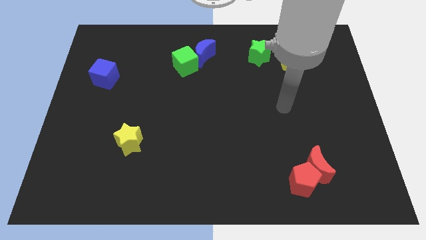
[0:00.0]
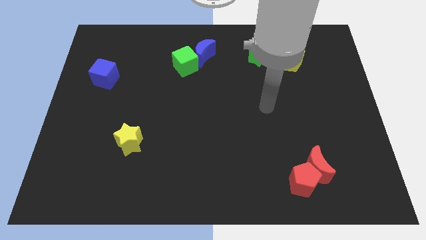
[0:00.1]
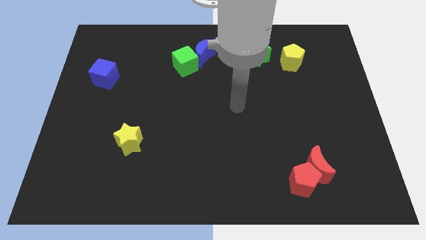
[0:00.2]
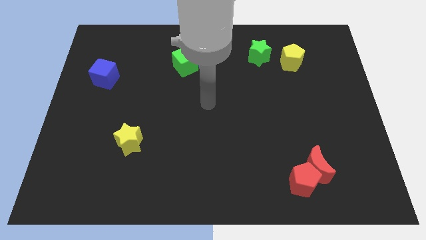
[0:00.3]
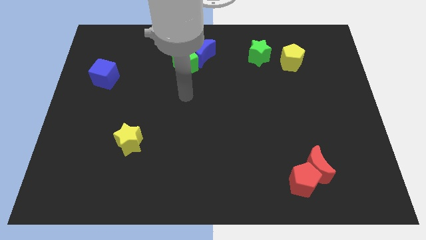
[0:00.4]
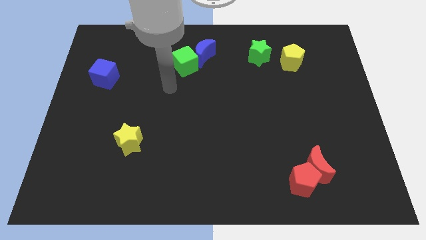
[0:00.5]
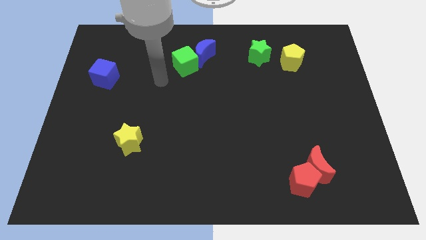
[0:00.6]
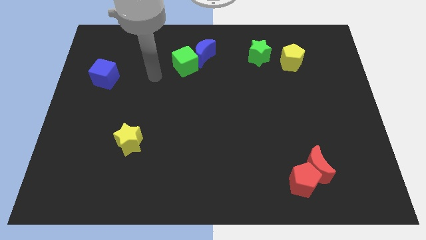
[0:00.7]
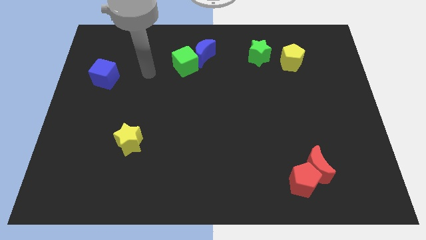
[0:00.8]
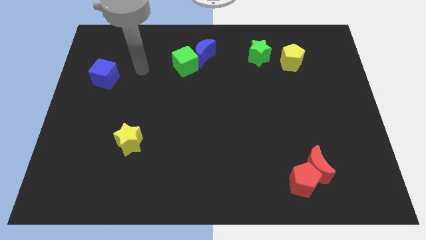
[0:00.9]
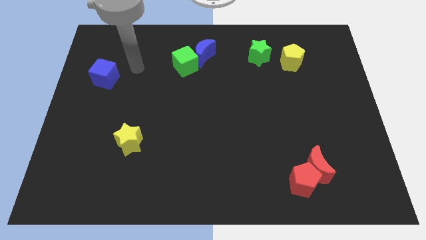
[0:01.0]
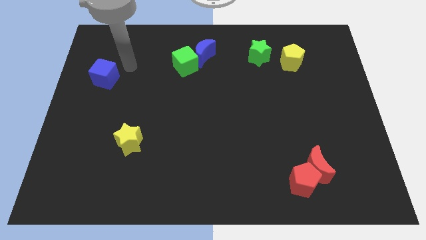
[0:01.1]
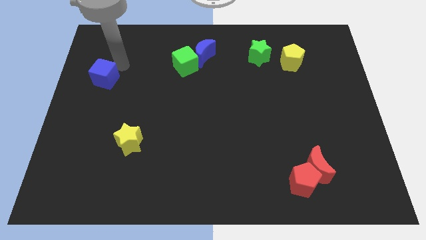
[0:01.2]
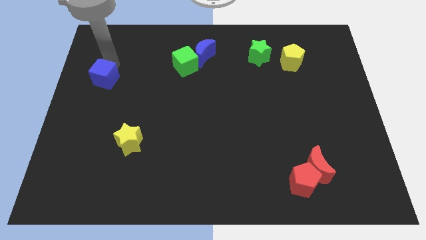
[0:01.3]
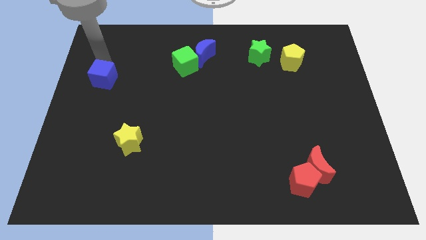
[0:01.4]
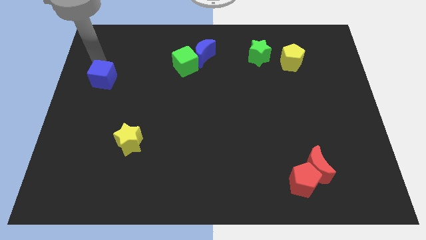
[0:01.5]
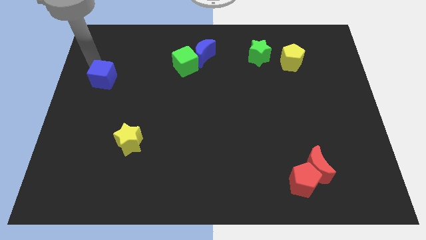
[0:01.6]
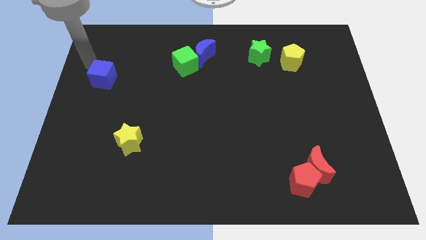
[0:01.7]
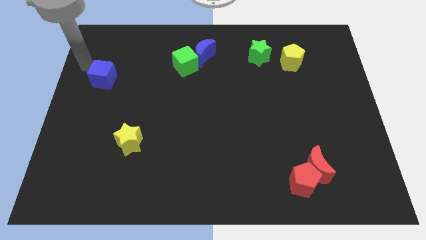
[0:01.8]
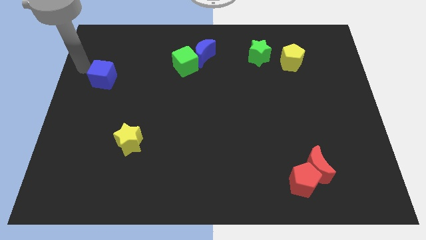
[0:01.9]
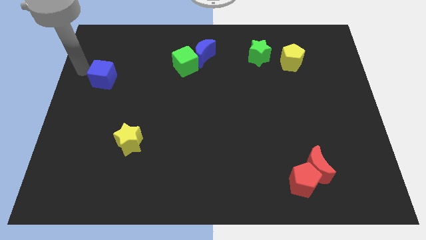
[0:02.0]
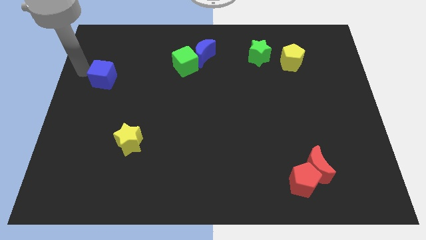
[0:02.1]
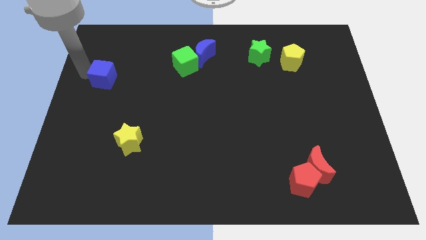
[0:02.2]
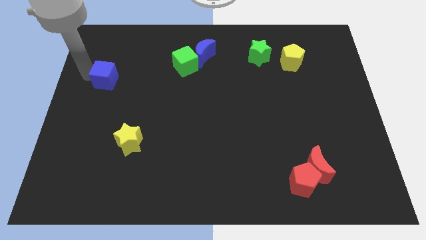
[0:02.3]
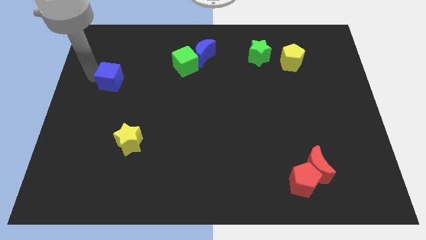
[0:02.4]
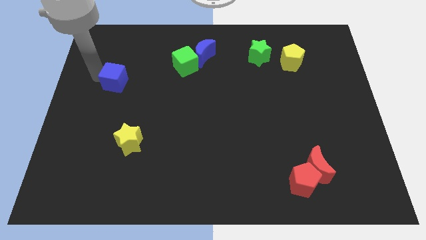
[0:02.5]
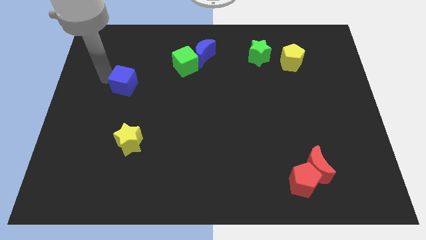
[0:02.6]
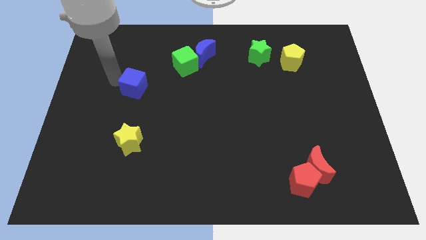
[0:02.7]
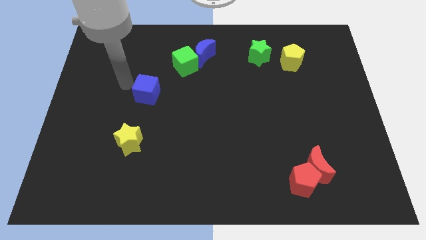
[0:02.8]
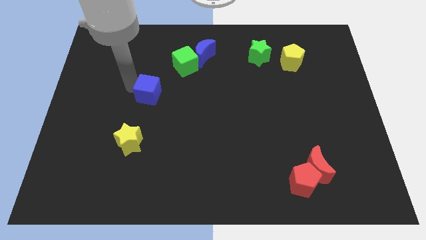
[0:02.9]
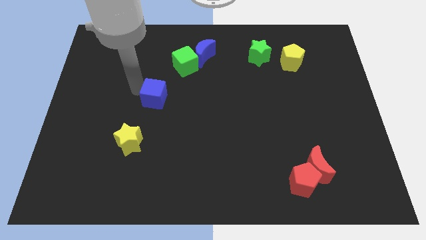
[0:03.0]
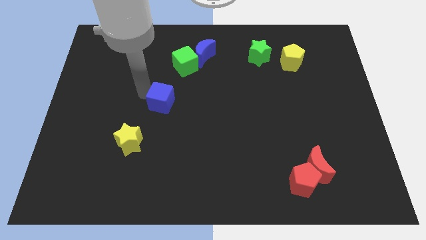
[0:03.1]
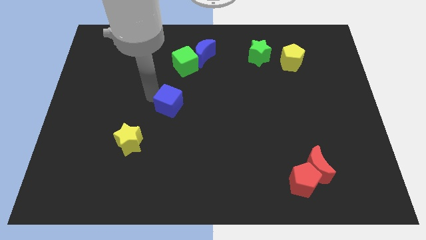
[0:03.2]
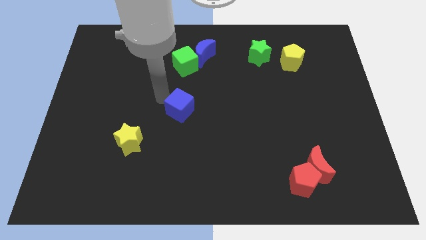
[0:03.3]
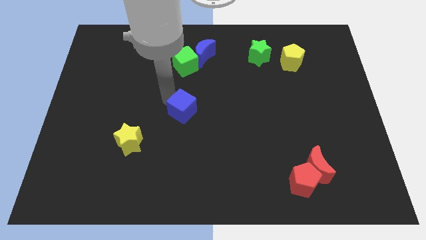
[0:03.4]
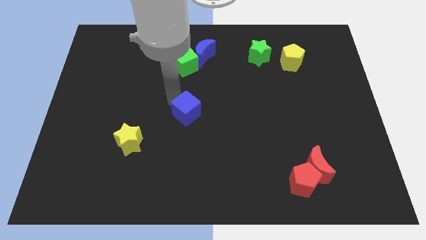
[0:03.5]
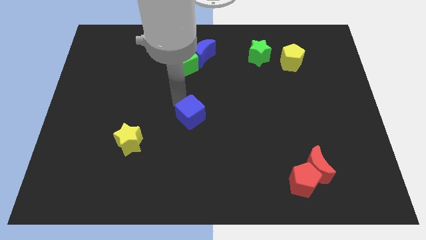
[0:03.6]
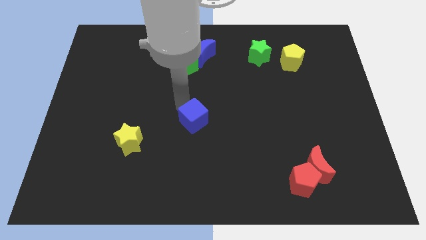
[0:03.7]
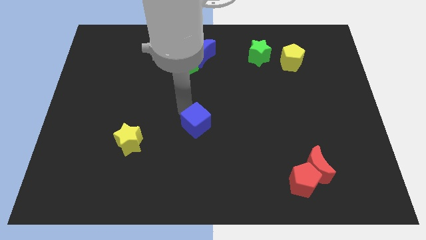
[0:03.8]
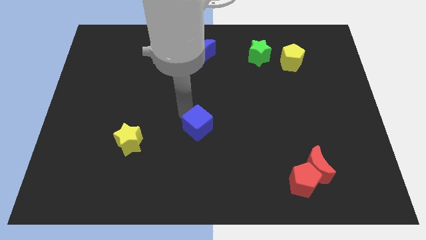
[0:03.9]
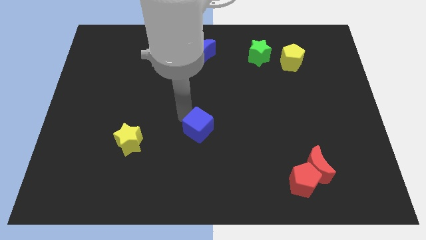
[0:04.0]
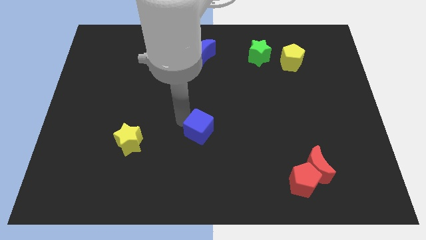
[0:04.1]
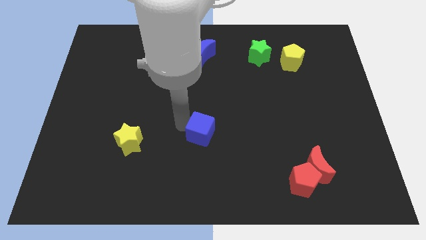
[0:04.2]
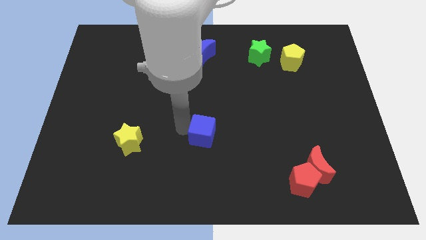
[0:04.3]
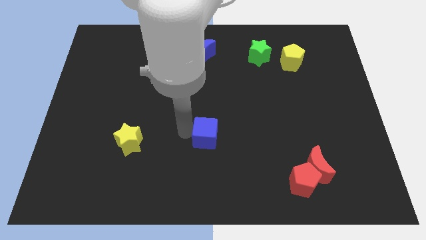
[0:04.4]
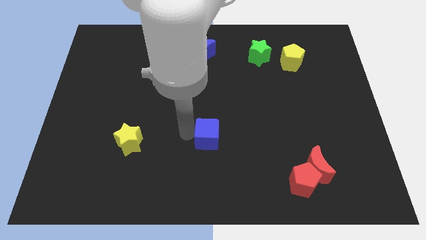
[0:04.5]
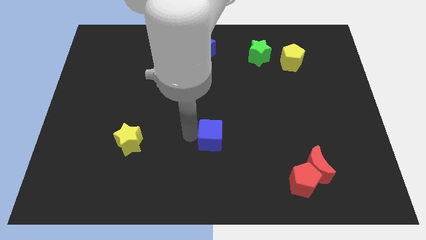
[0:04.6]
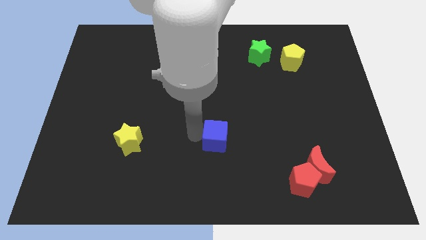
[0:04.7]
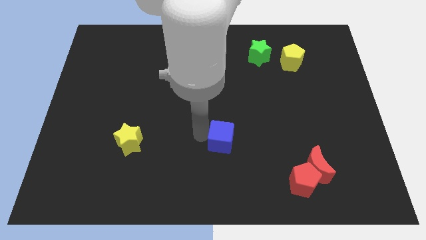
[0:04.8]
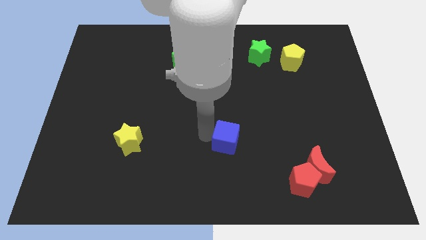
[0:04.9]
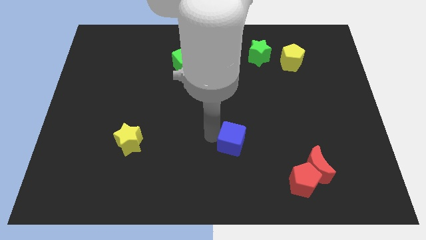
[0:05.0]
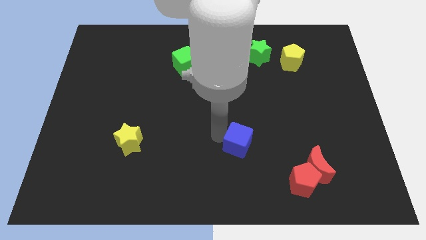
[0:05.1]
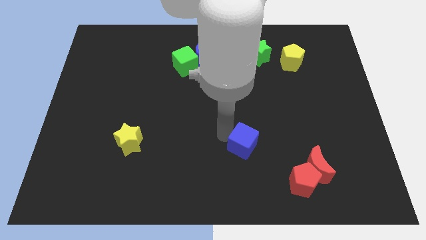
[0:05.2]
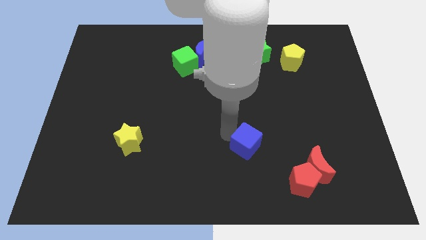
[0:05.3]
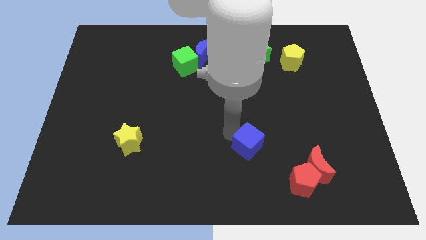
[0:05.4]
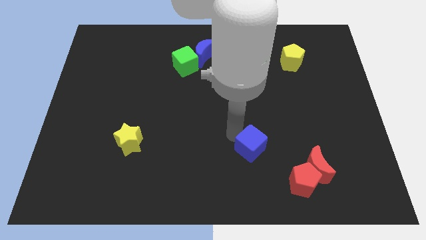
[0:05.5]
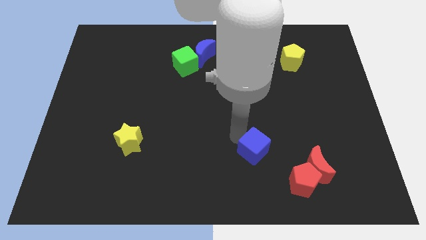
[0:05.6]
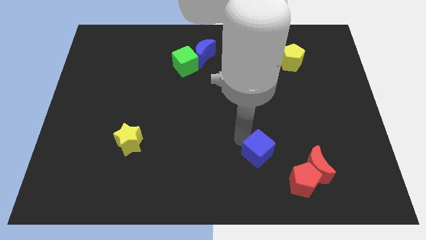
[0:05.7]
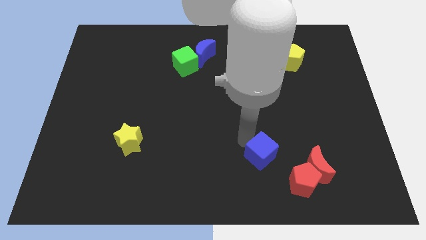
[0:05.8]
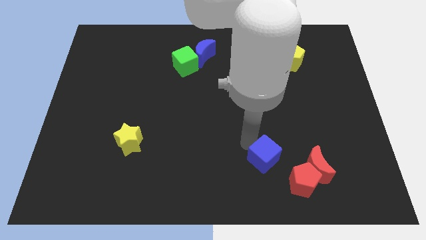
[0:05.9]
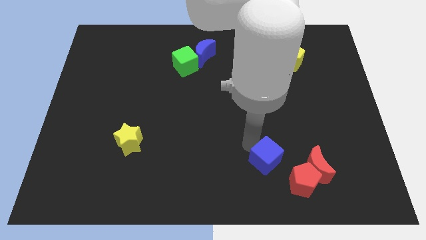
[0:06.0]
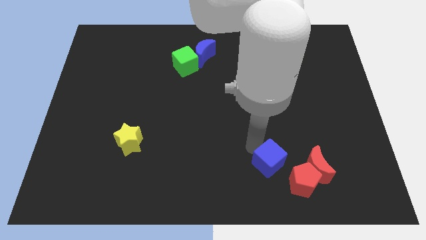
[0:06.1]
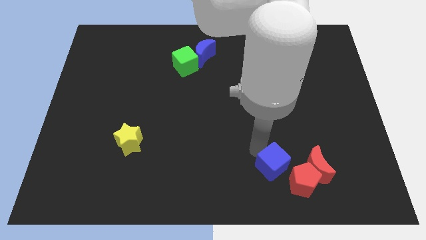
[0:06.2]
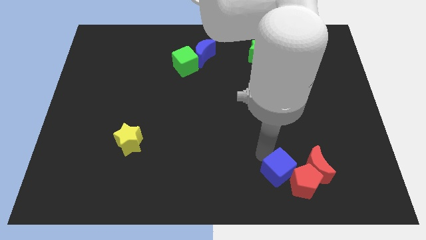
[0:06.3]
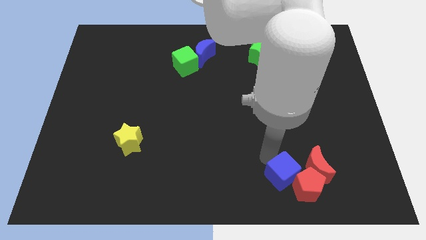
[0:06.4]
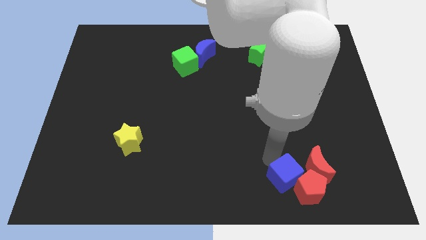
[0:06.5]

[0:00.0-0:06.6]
put the blue cube close to the red pentagon

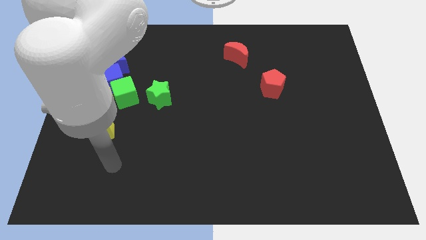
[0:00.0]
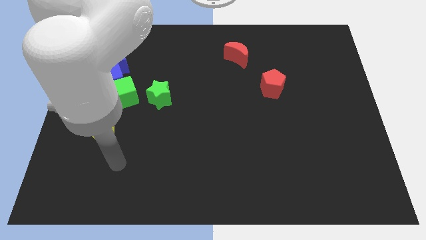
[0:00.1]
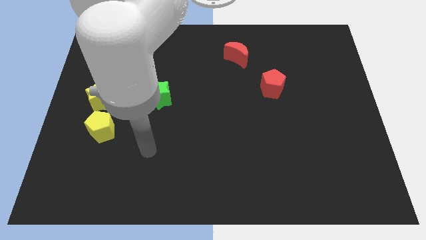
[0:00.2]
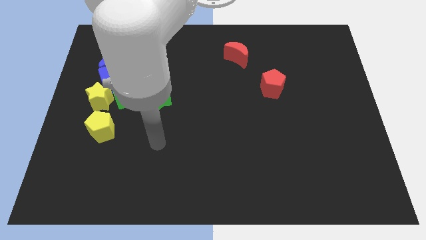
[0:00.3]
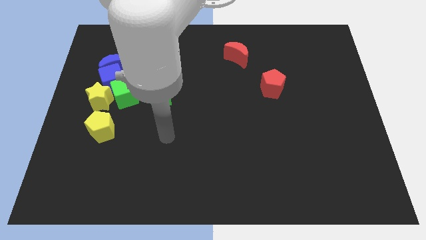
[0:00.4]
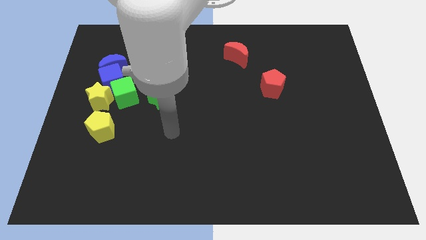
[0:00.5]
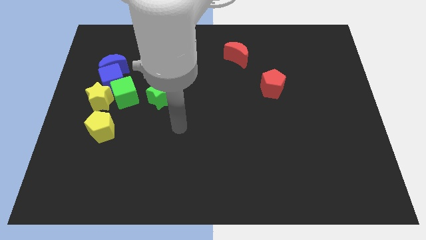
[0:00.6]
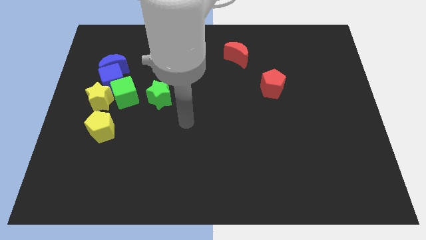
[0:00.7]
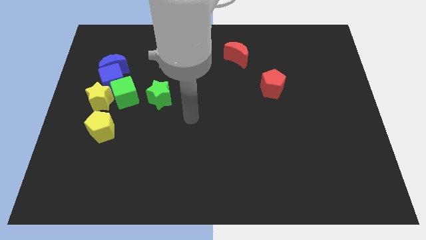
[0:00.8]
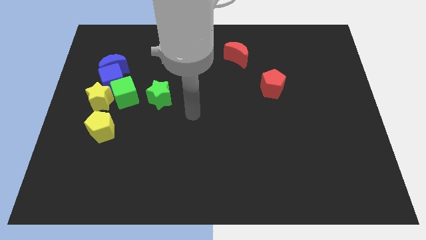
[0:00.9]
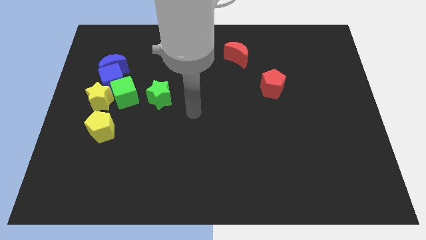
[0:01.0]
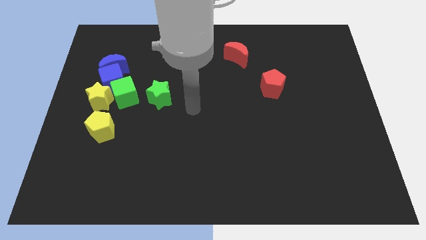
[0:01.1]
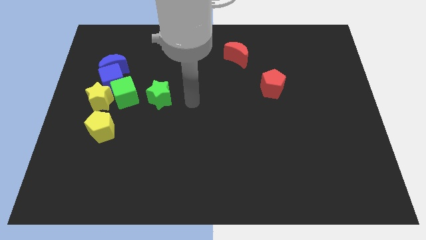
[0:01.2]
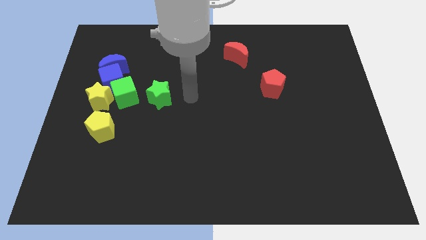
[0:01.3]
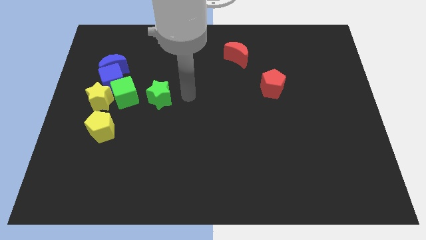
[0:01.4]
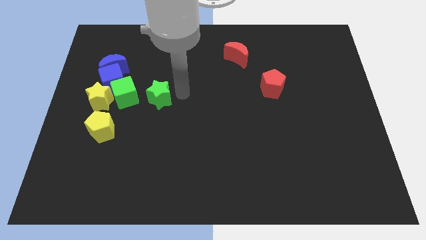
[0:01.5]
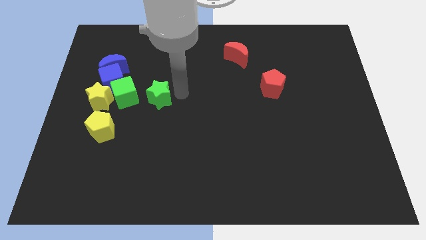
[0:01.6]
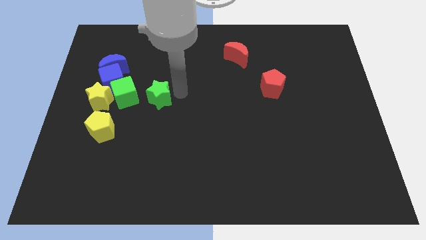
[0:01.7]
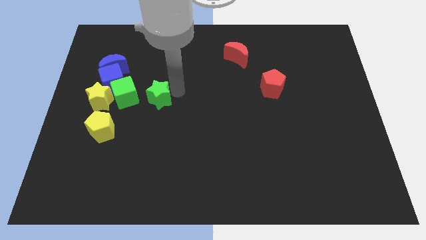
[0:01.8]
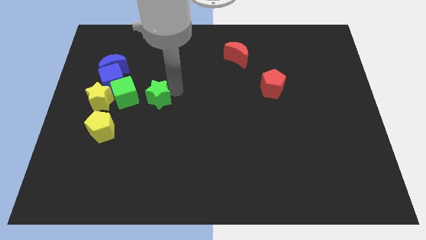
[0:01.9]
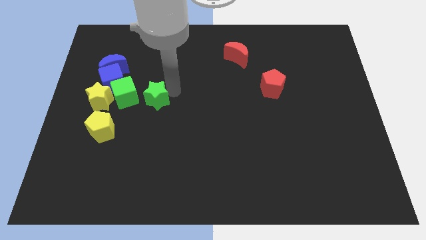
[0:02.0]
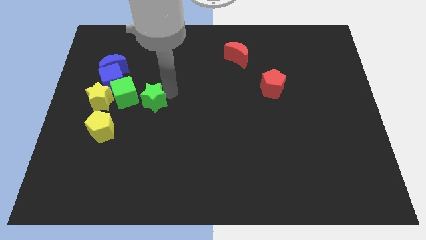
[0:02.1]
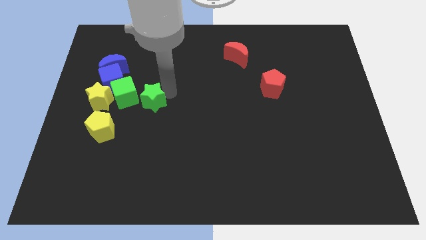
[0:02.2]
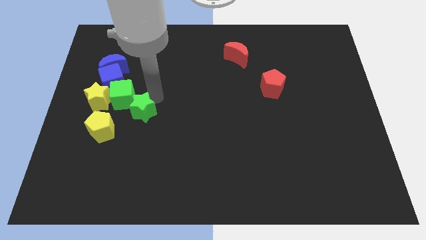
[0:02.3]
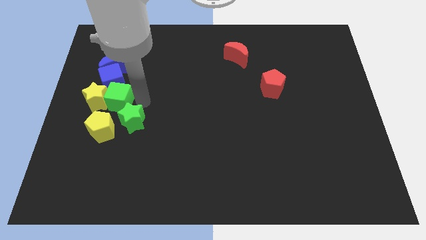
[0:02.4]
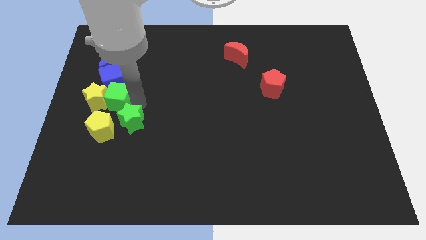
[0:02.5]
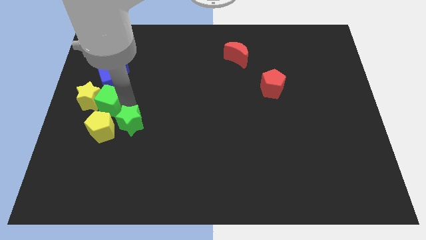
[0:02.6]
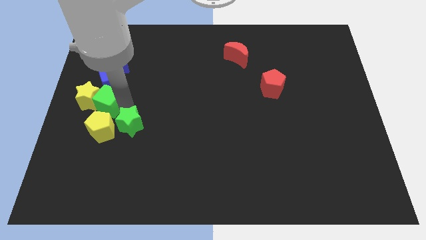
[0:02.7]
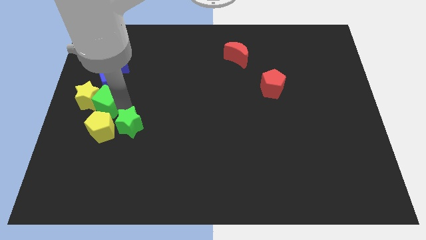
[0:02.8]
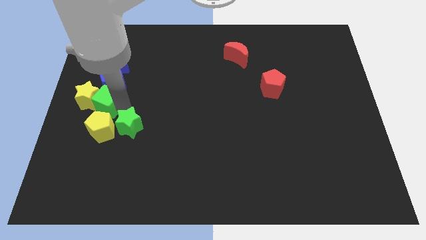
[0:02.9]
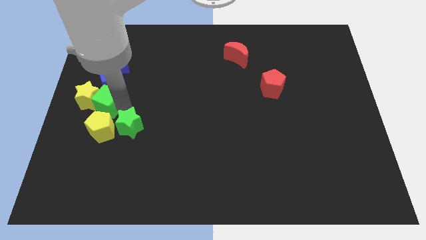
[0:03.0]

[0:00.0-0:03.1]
slide the green star to the yellow pentagon
